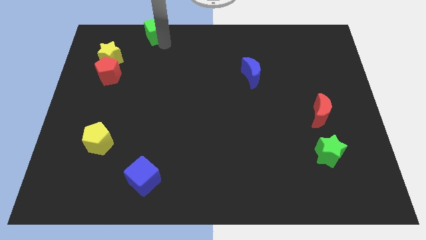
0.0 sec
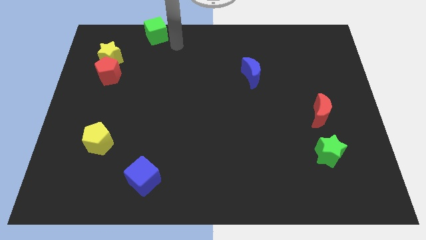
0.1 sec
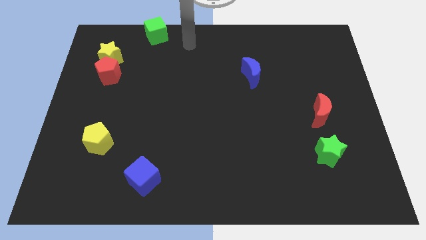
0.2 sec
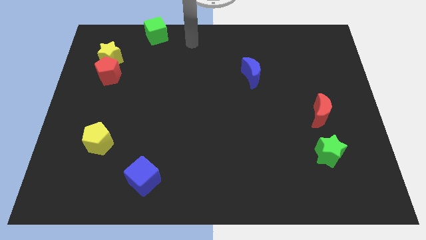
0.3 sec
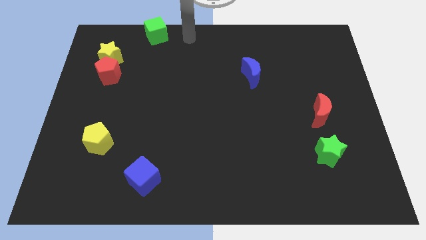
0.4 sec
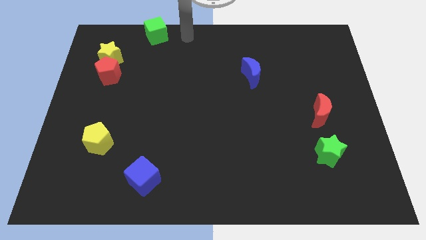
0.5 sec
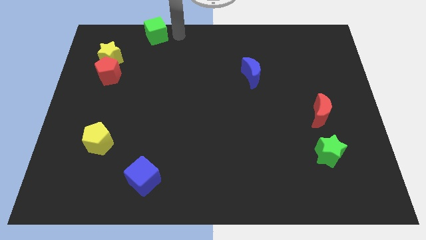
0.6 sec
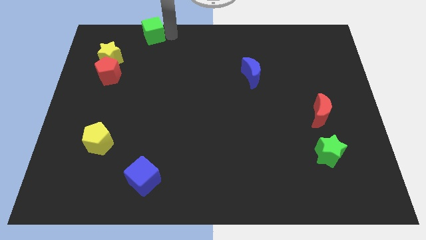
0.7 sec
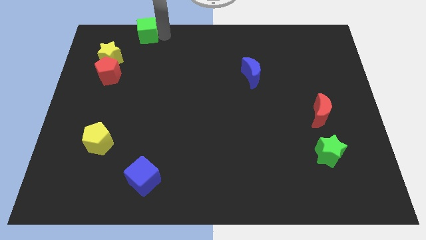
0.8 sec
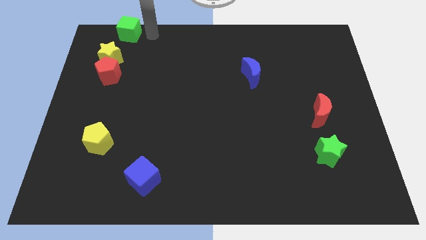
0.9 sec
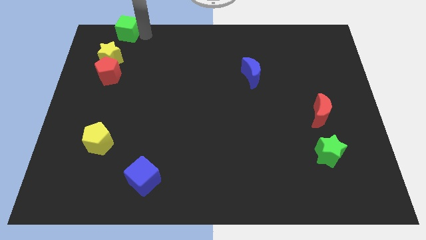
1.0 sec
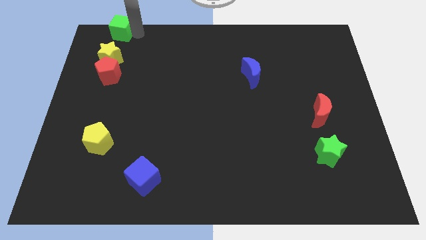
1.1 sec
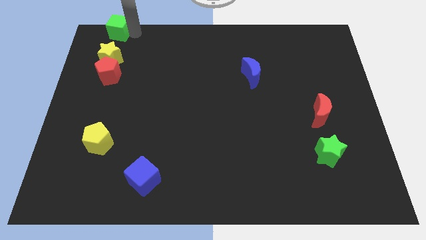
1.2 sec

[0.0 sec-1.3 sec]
move the green cube to the top left corner of board

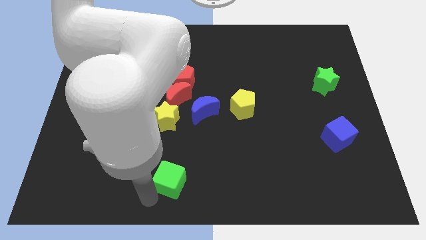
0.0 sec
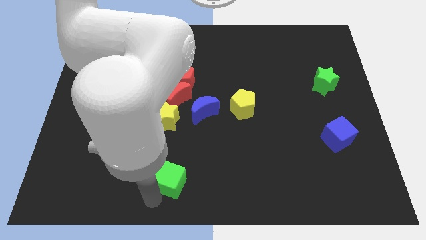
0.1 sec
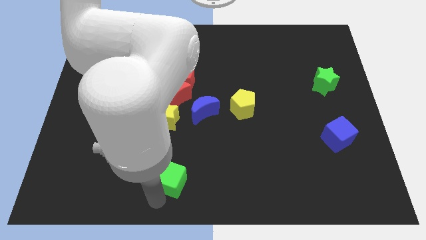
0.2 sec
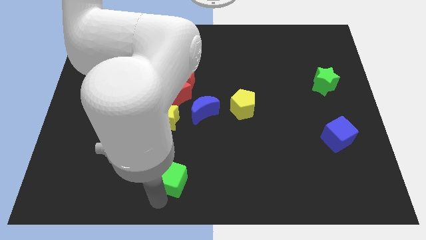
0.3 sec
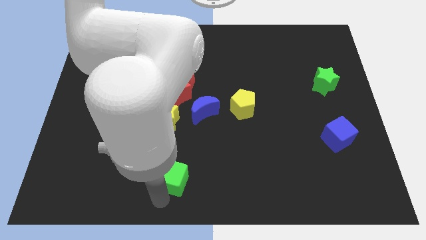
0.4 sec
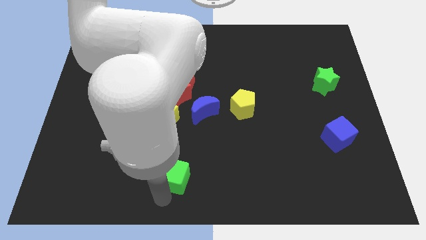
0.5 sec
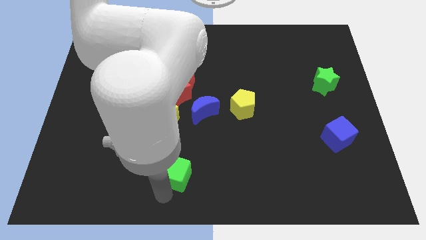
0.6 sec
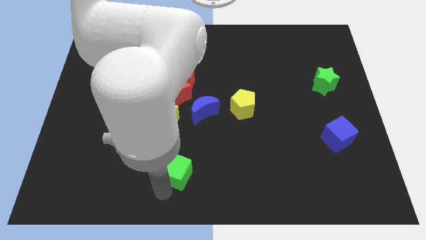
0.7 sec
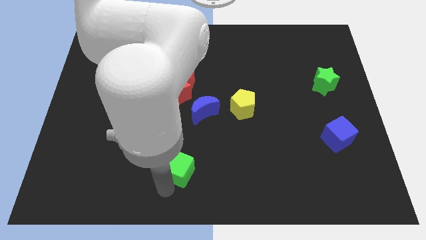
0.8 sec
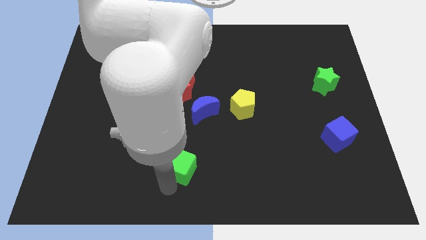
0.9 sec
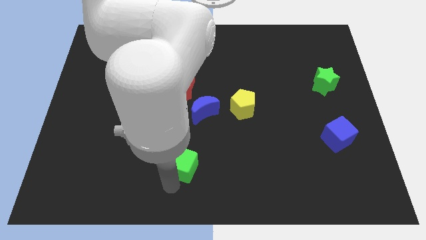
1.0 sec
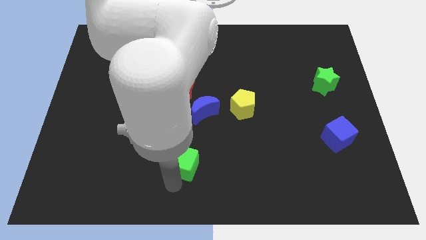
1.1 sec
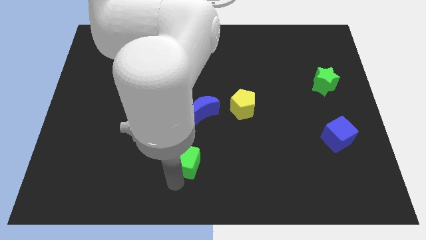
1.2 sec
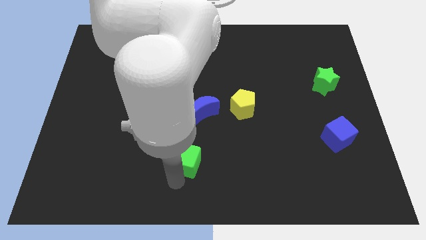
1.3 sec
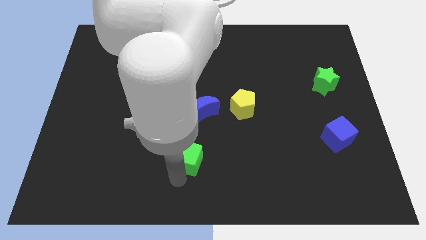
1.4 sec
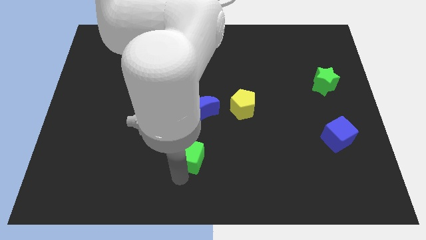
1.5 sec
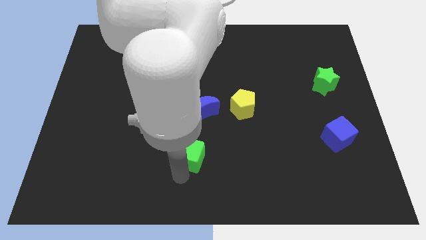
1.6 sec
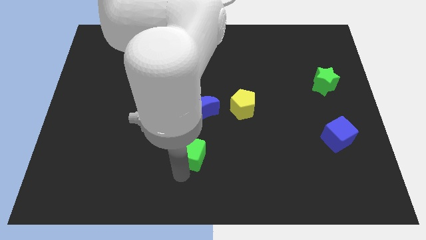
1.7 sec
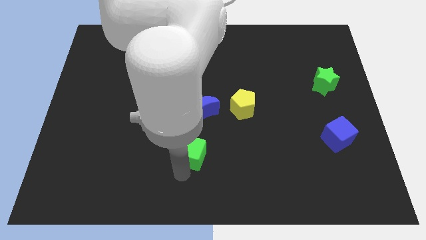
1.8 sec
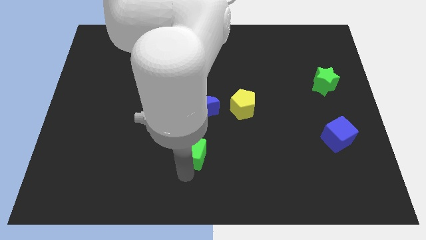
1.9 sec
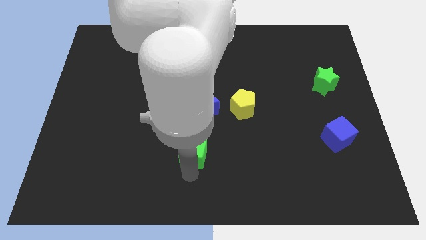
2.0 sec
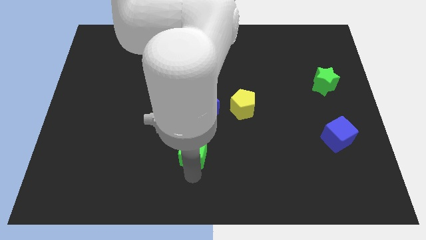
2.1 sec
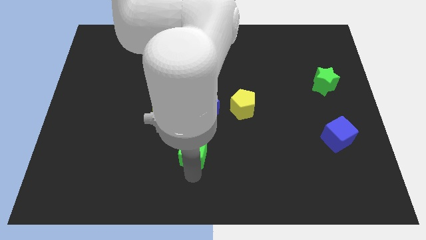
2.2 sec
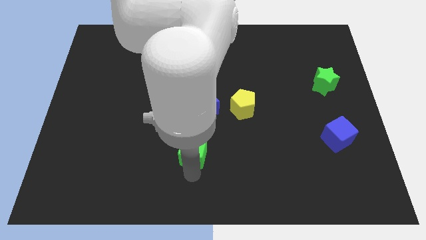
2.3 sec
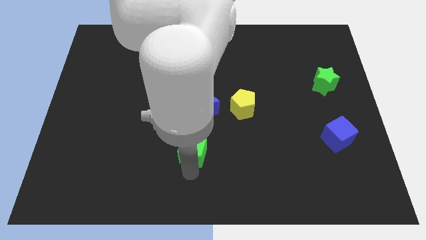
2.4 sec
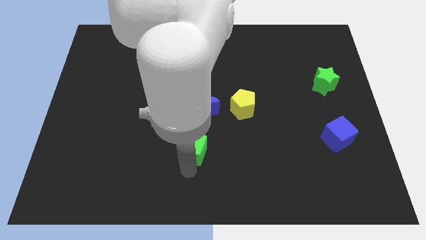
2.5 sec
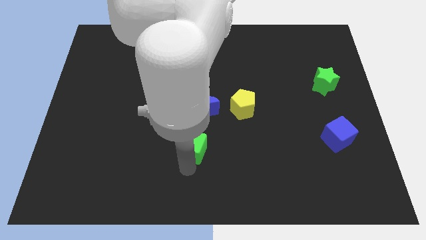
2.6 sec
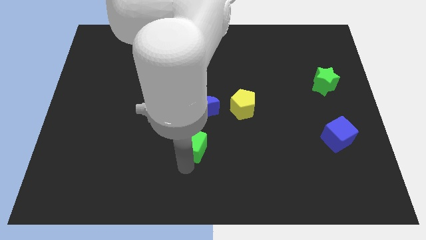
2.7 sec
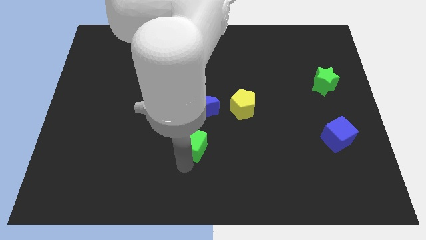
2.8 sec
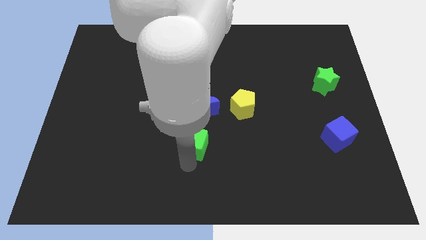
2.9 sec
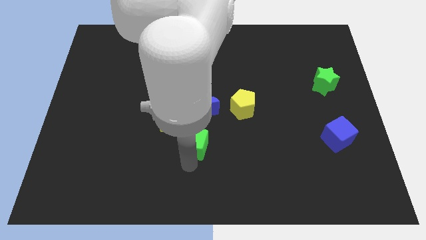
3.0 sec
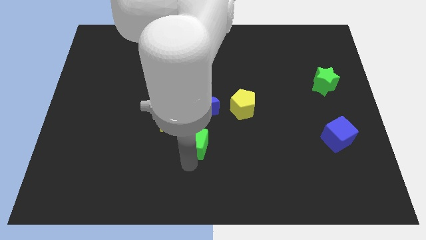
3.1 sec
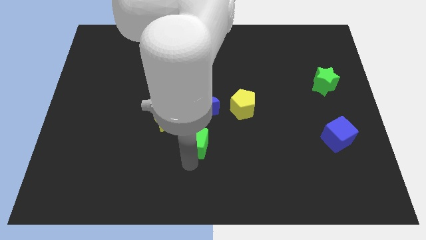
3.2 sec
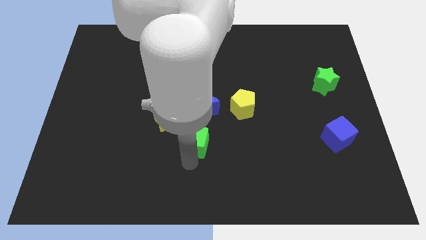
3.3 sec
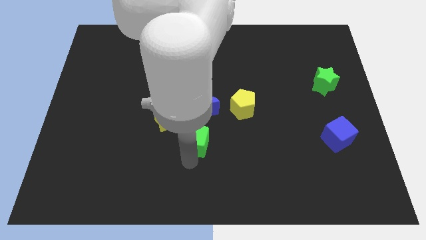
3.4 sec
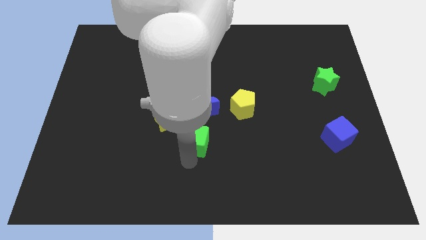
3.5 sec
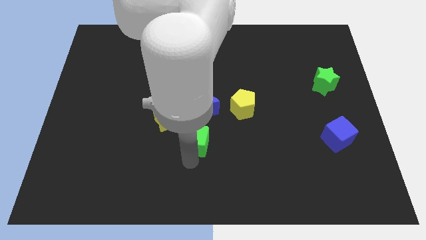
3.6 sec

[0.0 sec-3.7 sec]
push the green cube towards the down to blue crescent

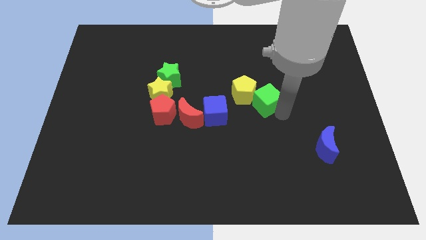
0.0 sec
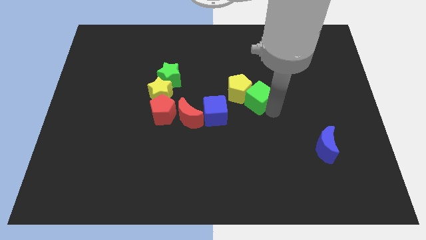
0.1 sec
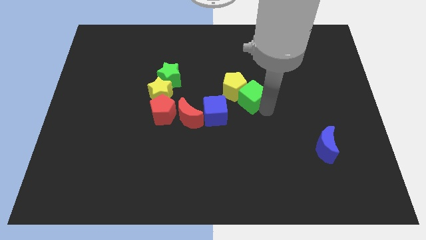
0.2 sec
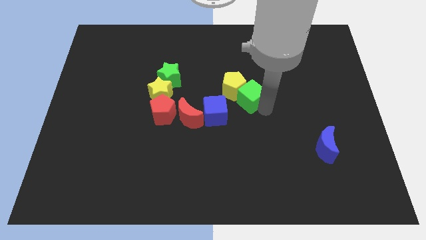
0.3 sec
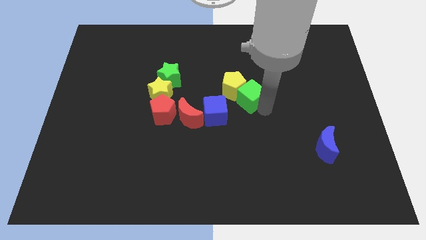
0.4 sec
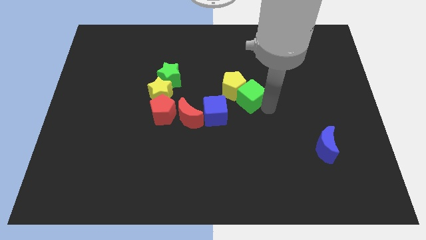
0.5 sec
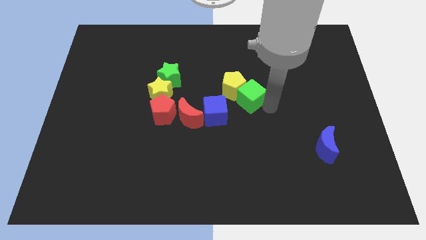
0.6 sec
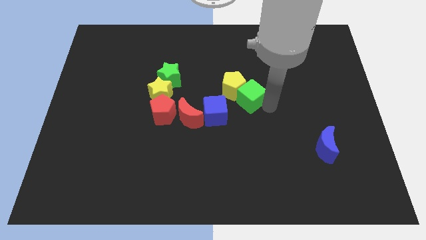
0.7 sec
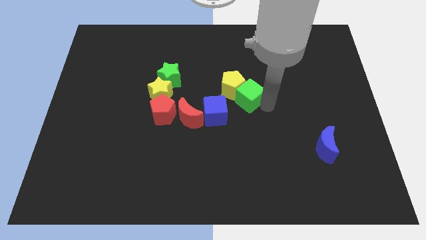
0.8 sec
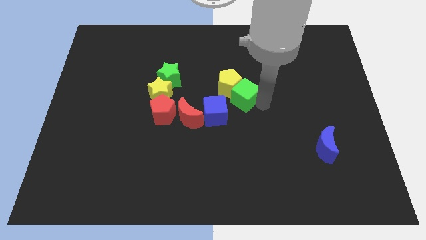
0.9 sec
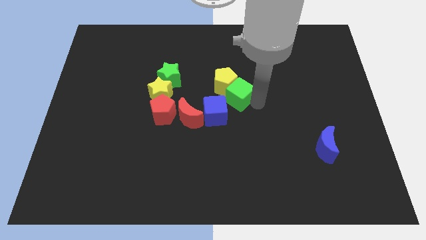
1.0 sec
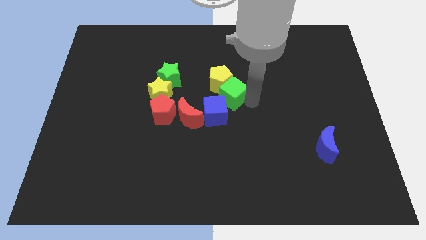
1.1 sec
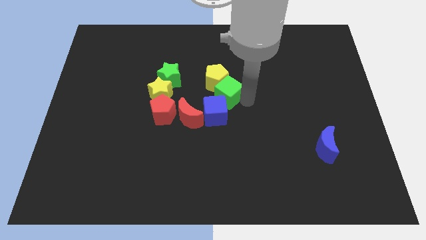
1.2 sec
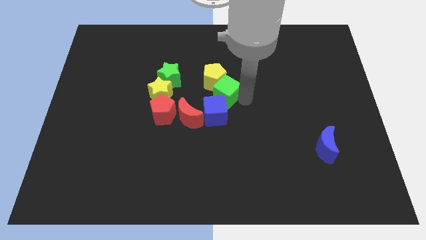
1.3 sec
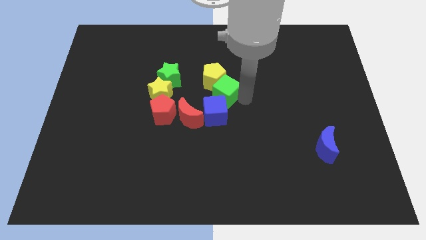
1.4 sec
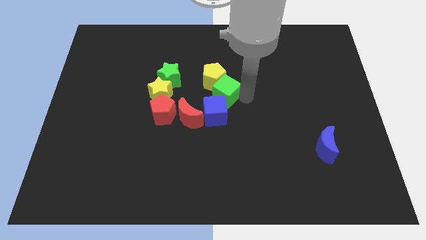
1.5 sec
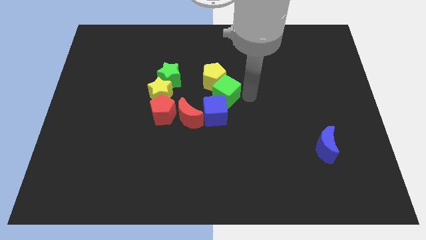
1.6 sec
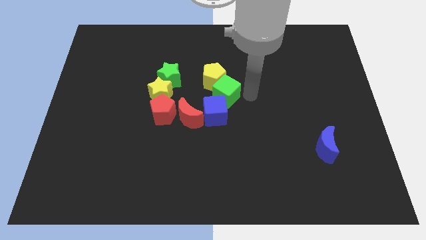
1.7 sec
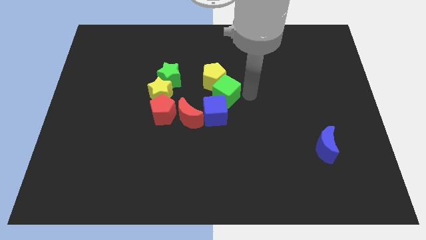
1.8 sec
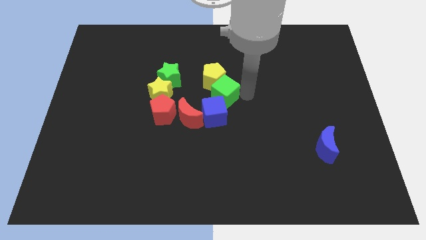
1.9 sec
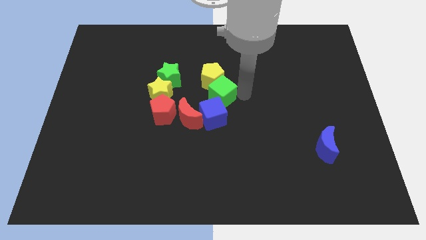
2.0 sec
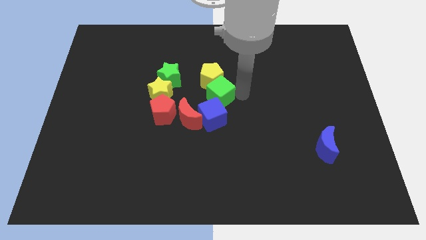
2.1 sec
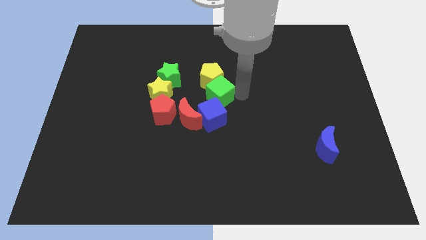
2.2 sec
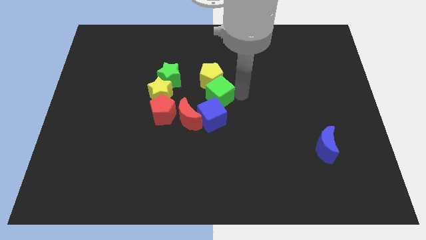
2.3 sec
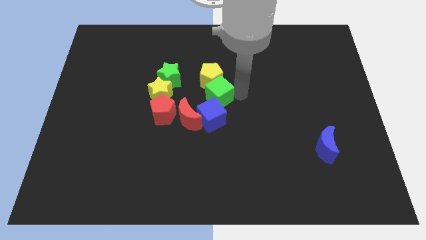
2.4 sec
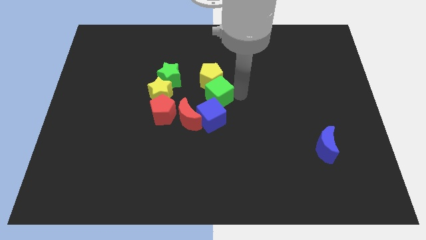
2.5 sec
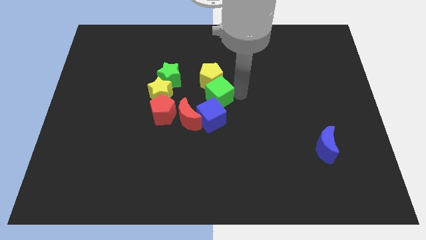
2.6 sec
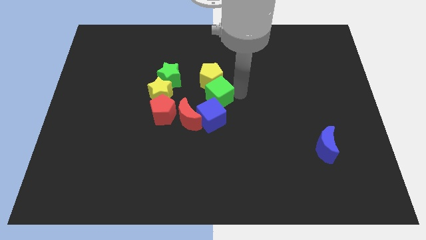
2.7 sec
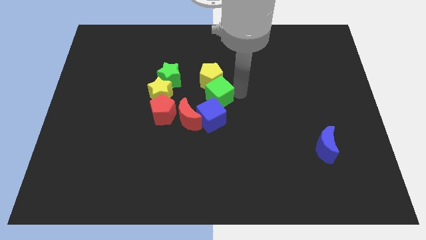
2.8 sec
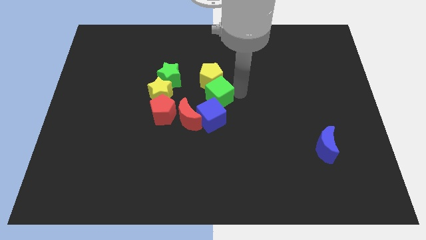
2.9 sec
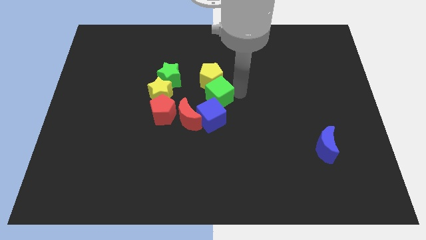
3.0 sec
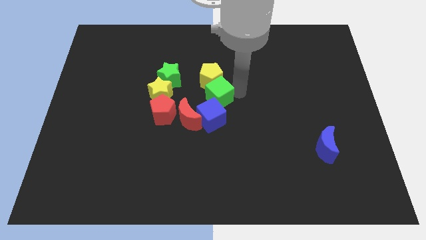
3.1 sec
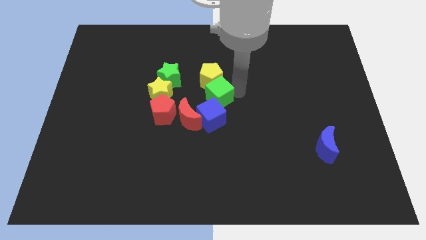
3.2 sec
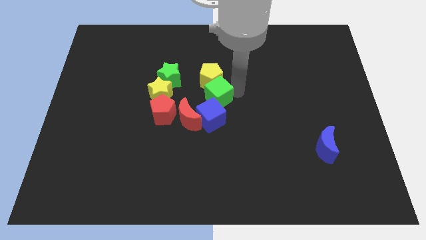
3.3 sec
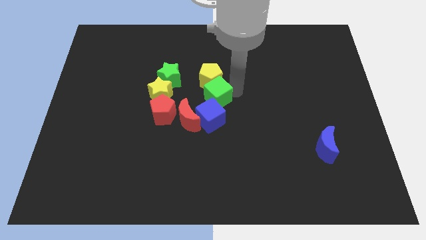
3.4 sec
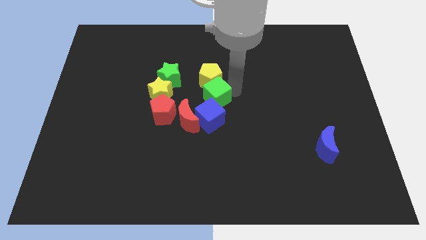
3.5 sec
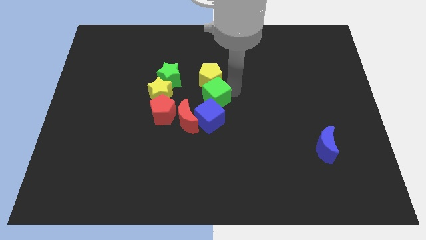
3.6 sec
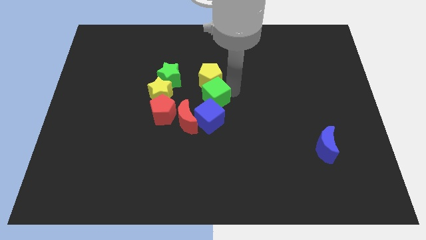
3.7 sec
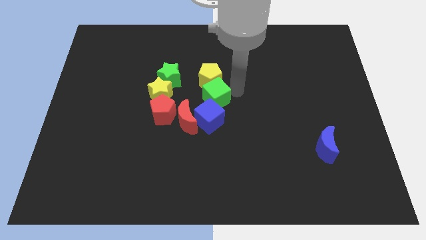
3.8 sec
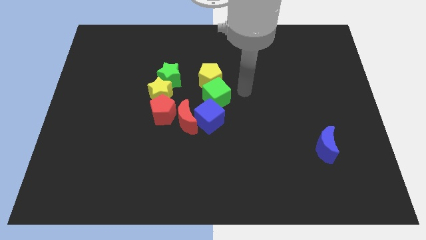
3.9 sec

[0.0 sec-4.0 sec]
push the green cube along with yellow pentagon towards the top of the blue cube

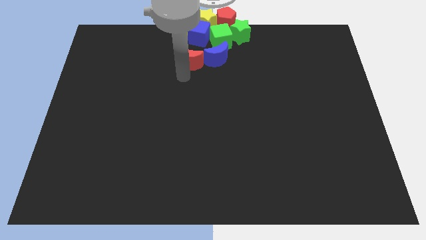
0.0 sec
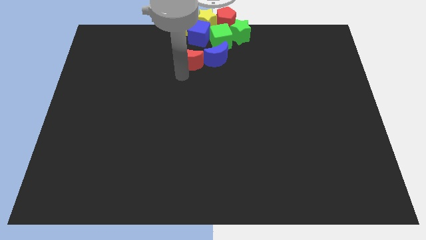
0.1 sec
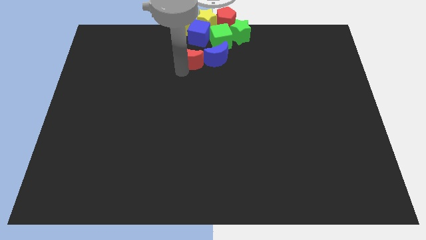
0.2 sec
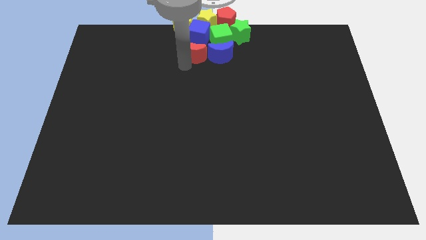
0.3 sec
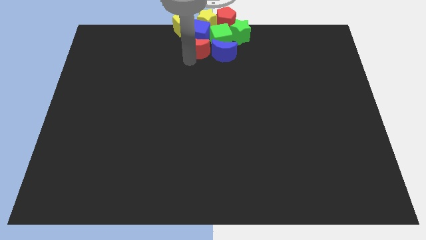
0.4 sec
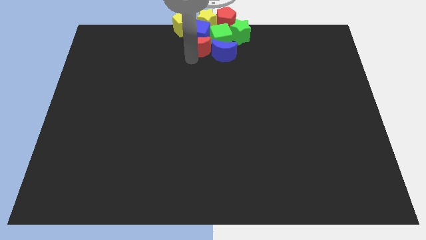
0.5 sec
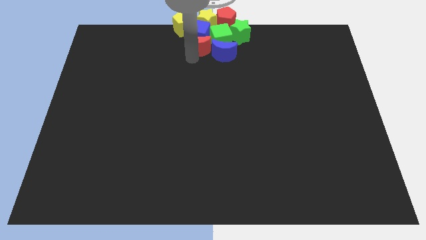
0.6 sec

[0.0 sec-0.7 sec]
push the red crescent close to the blue cube
